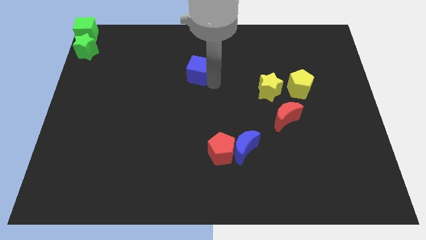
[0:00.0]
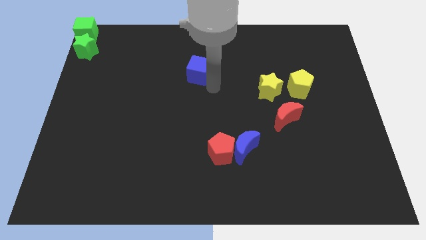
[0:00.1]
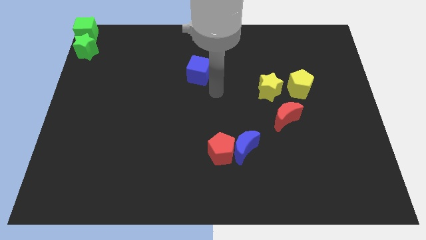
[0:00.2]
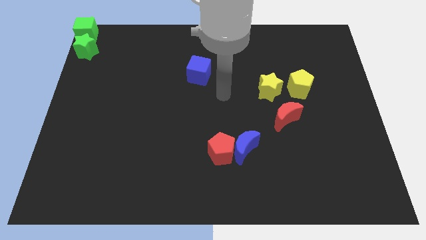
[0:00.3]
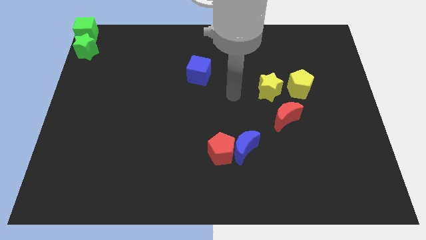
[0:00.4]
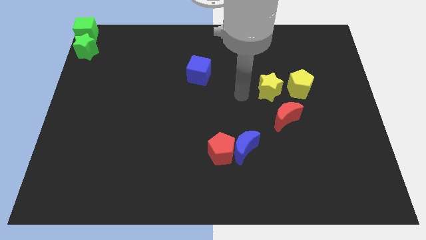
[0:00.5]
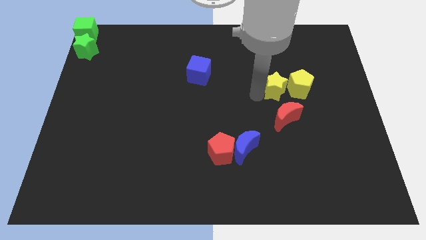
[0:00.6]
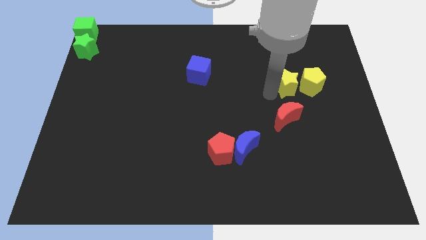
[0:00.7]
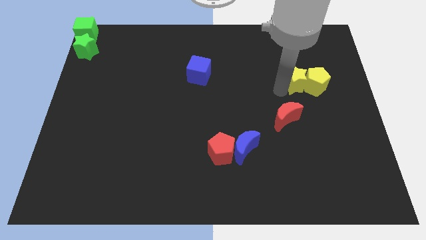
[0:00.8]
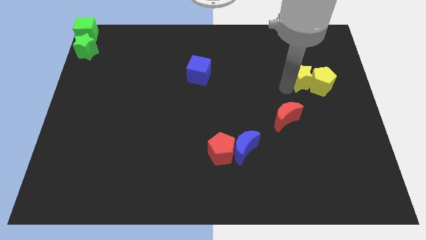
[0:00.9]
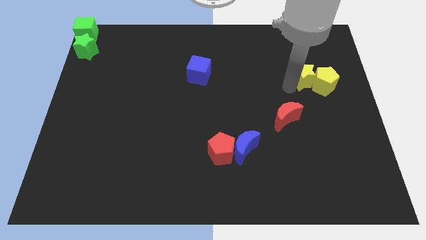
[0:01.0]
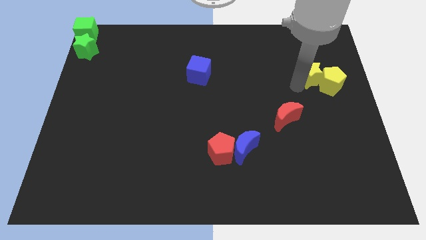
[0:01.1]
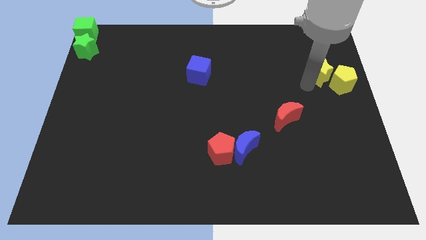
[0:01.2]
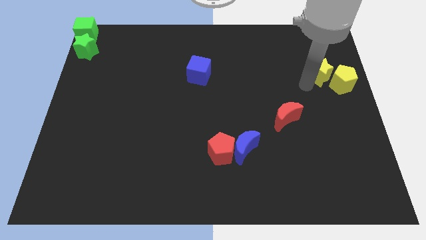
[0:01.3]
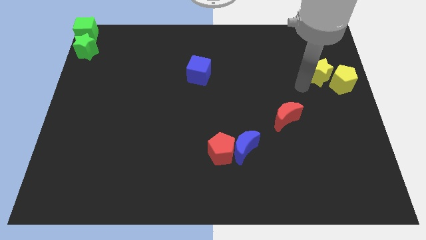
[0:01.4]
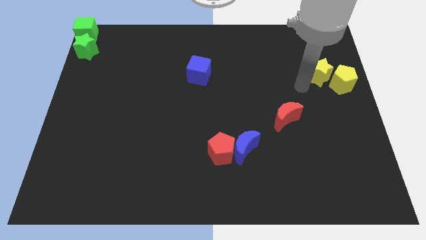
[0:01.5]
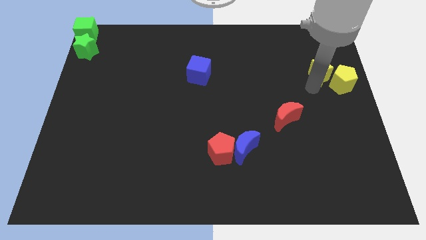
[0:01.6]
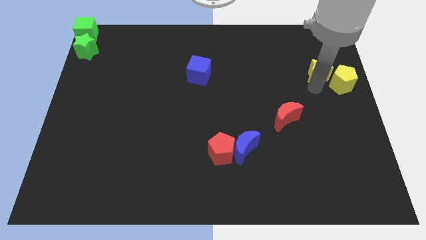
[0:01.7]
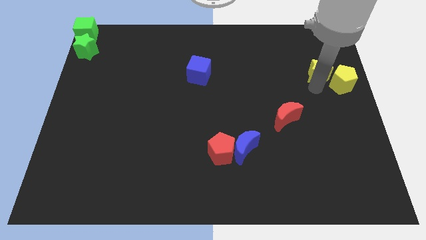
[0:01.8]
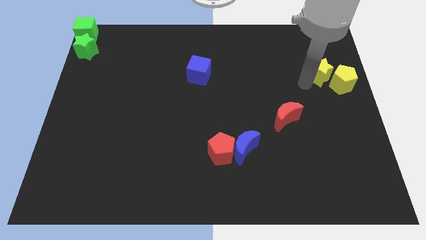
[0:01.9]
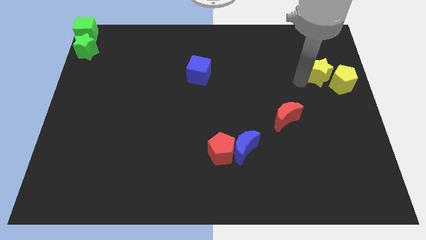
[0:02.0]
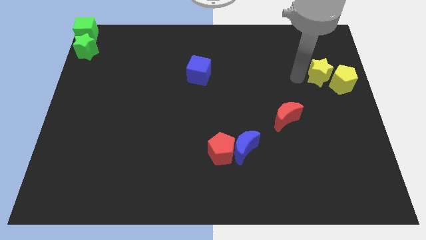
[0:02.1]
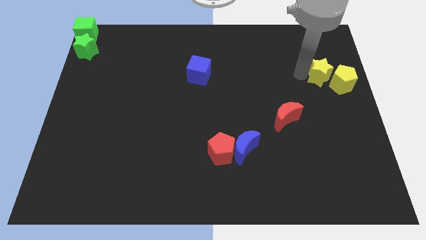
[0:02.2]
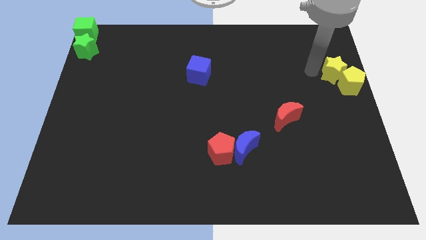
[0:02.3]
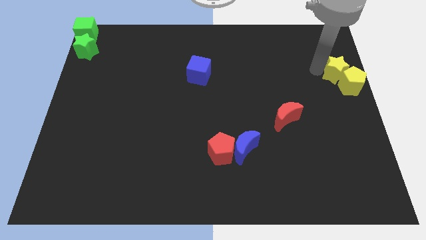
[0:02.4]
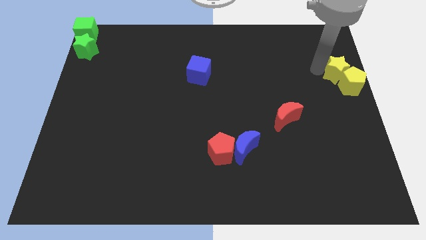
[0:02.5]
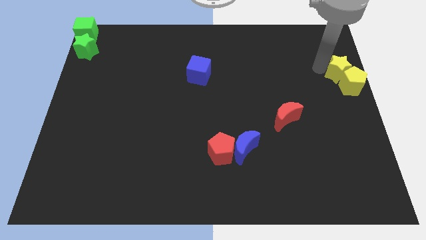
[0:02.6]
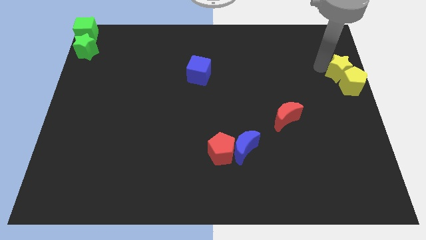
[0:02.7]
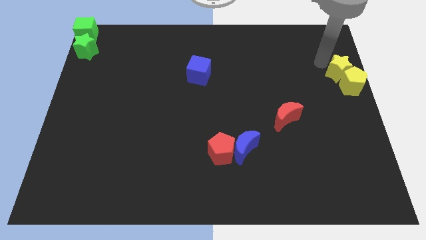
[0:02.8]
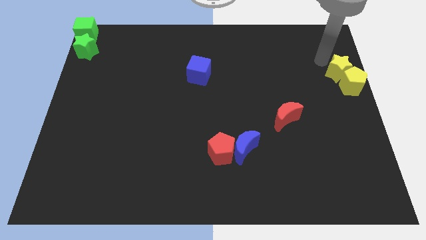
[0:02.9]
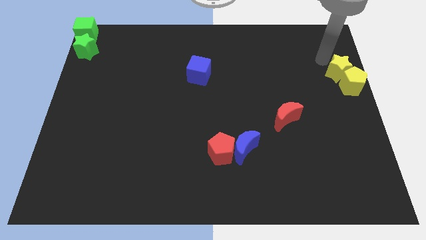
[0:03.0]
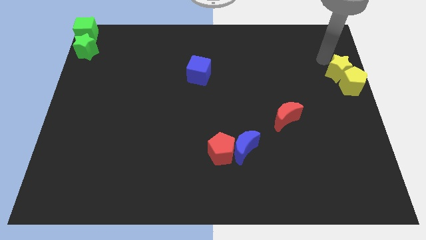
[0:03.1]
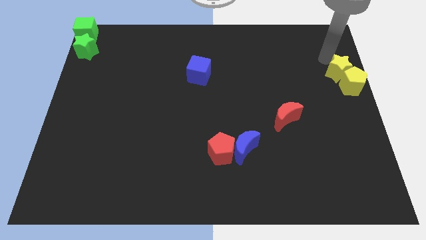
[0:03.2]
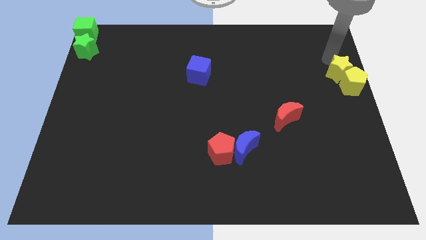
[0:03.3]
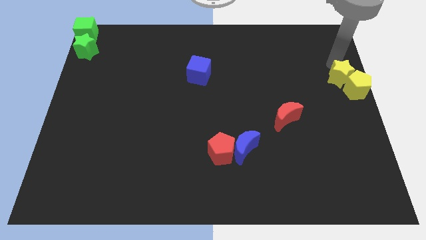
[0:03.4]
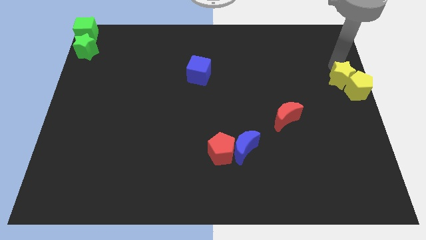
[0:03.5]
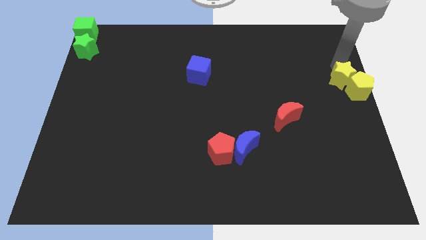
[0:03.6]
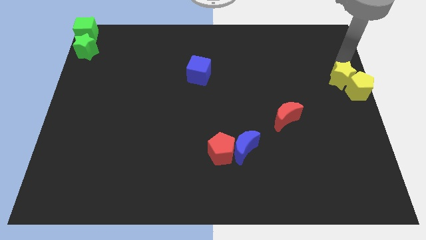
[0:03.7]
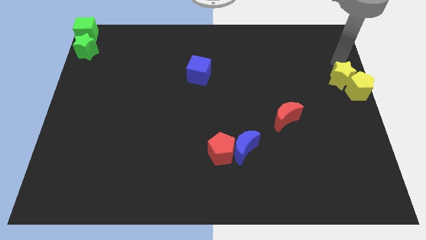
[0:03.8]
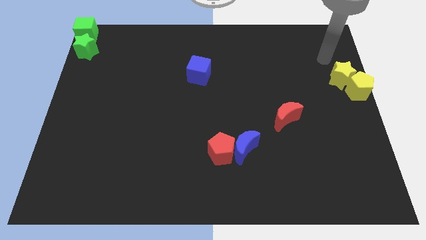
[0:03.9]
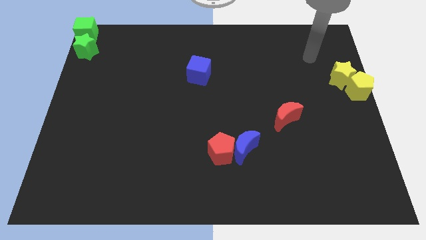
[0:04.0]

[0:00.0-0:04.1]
place the group of yellow blocks at the center right of the board

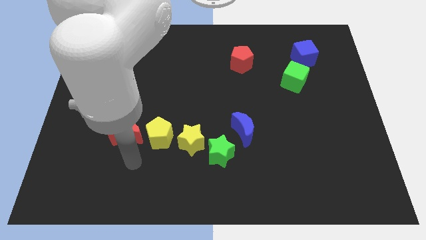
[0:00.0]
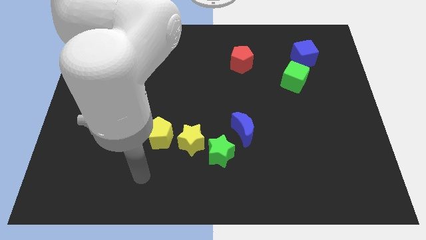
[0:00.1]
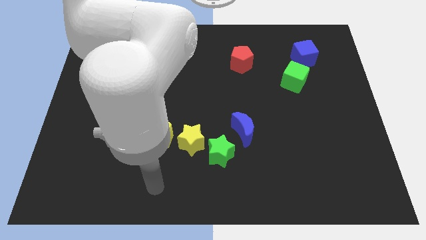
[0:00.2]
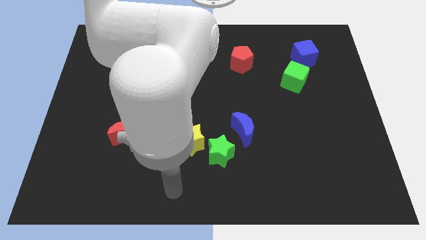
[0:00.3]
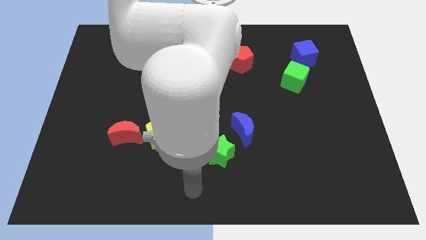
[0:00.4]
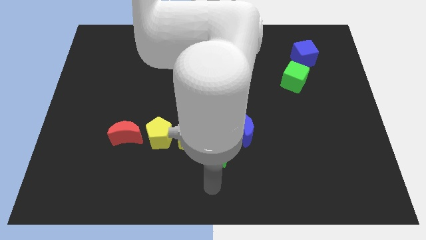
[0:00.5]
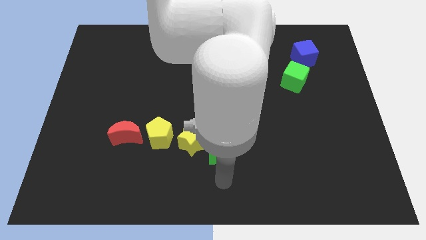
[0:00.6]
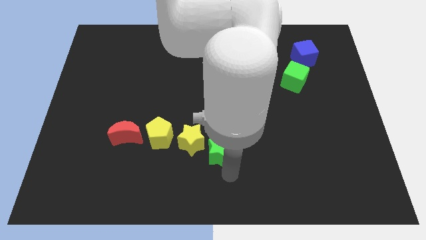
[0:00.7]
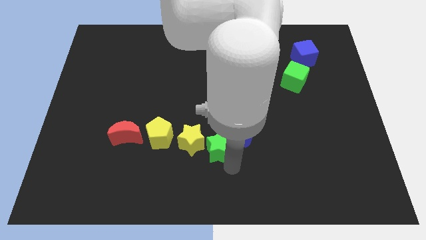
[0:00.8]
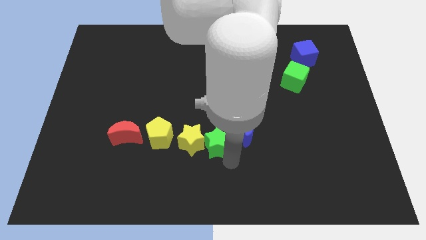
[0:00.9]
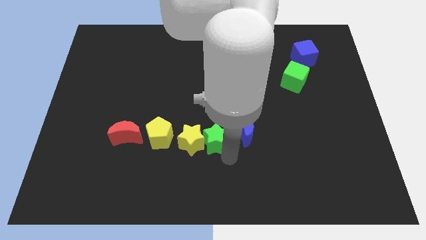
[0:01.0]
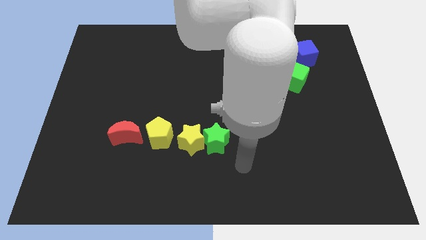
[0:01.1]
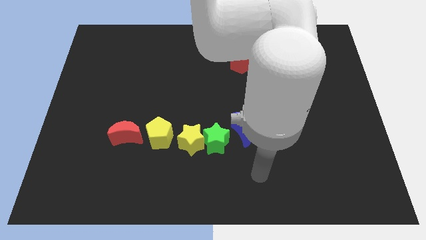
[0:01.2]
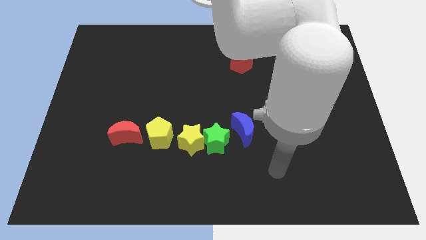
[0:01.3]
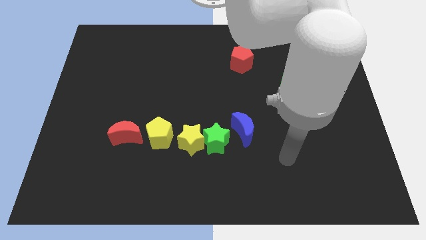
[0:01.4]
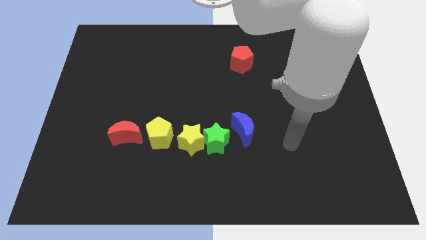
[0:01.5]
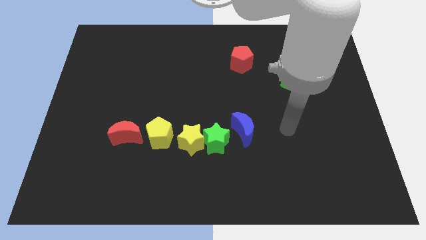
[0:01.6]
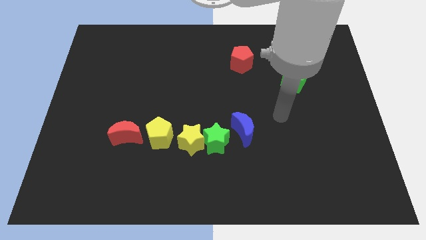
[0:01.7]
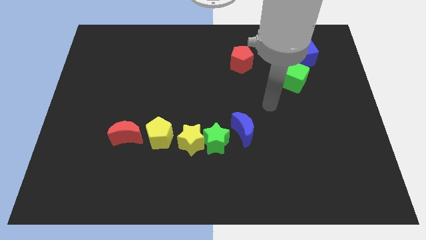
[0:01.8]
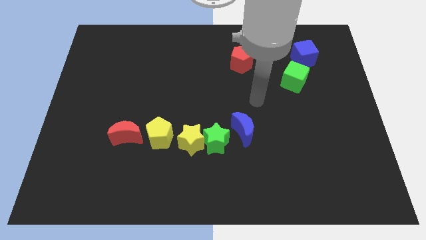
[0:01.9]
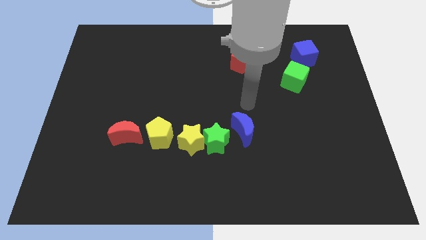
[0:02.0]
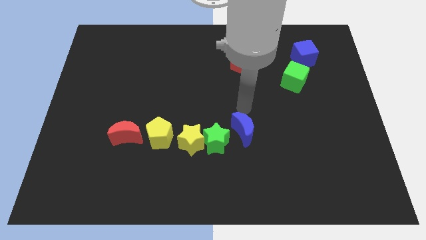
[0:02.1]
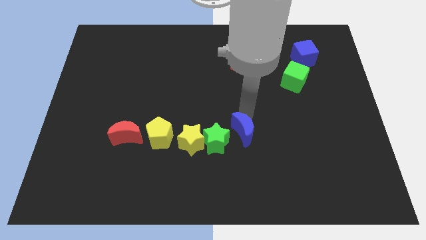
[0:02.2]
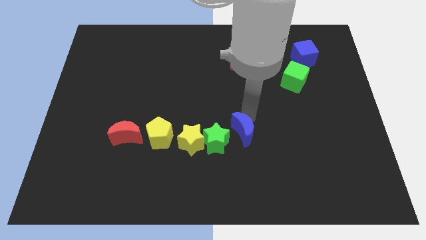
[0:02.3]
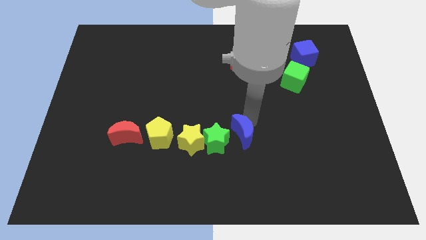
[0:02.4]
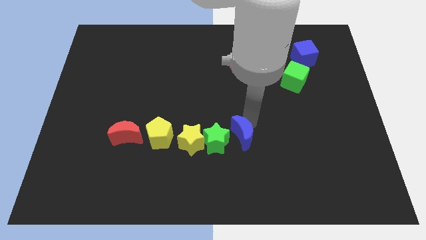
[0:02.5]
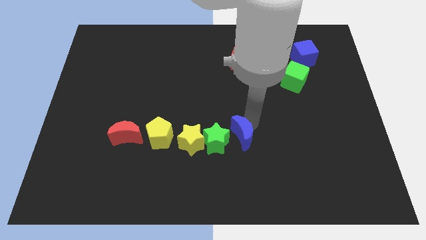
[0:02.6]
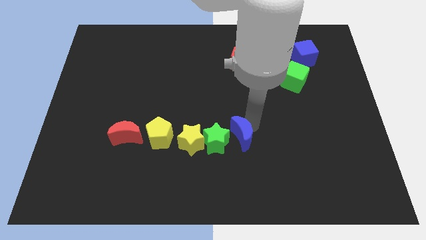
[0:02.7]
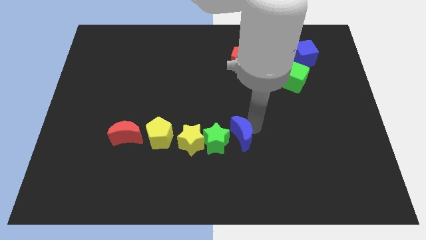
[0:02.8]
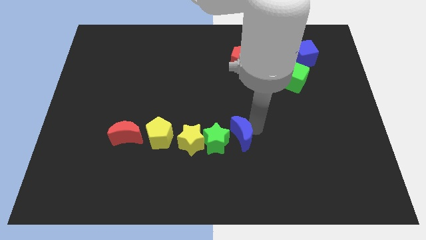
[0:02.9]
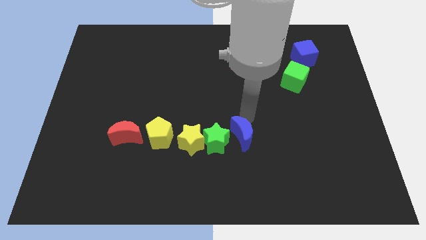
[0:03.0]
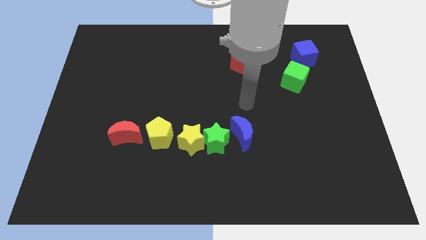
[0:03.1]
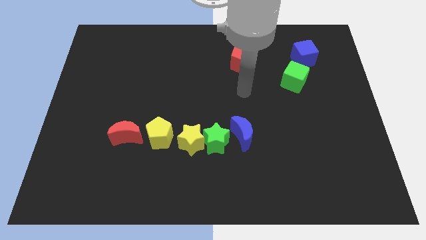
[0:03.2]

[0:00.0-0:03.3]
push the green star and blue crescent to the right side of the yellow star

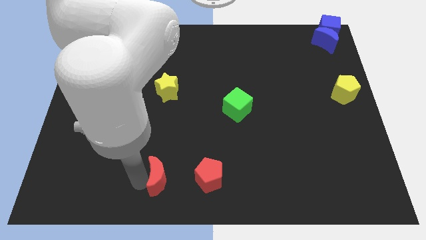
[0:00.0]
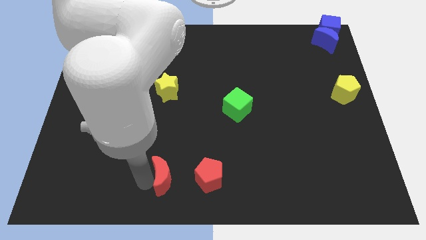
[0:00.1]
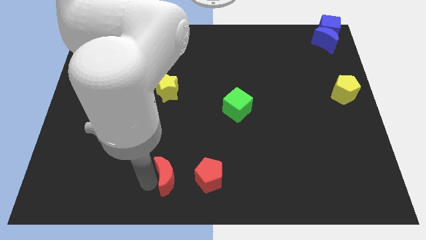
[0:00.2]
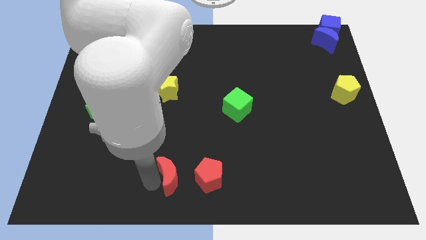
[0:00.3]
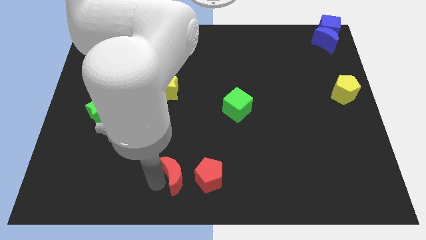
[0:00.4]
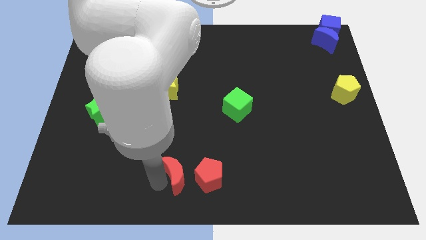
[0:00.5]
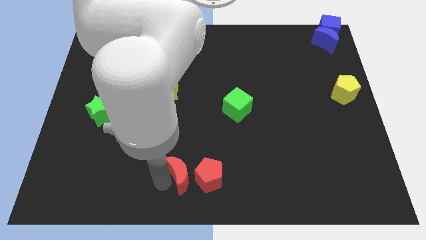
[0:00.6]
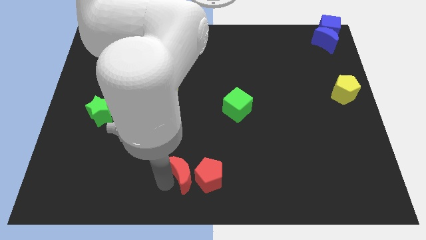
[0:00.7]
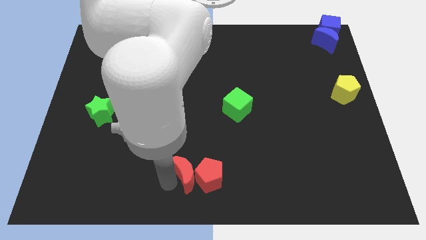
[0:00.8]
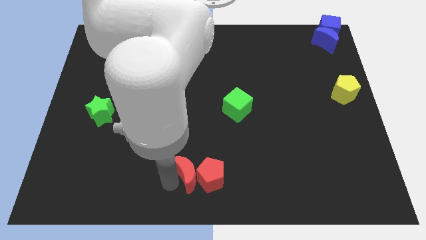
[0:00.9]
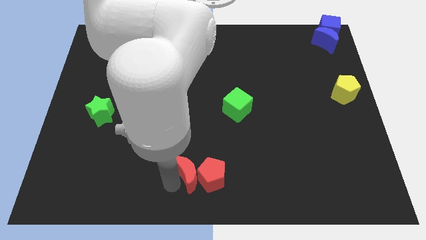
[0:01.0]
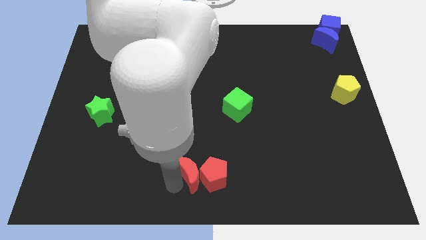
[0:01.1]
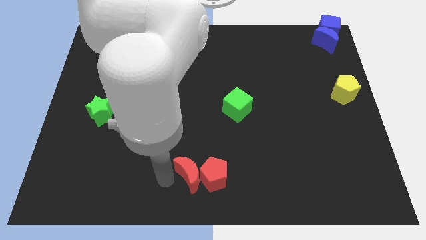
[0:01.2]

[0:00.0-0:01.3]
push red moon into the red petagon

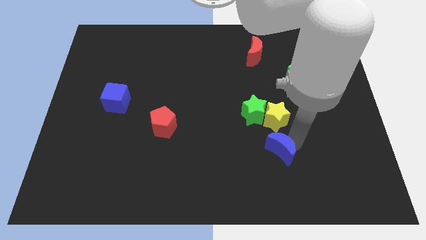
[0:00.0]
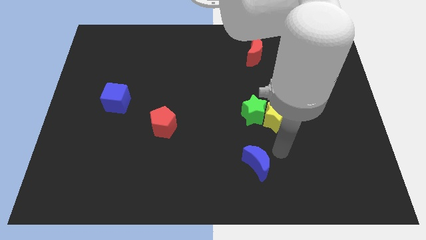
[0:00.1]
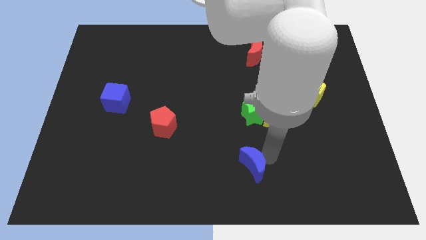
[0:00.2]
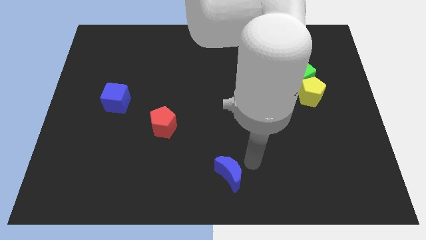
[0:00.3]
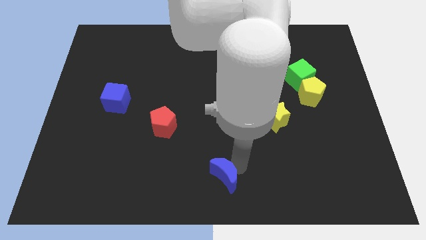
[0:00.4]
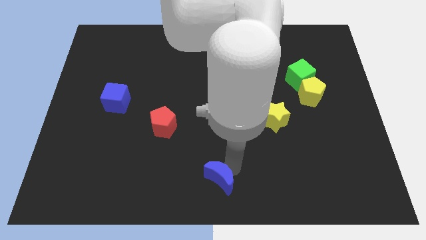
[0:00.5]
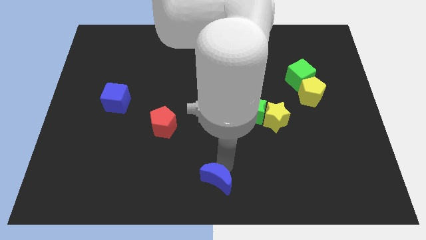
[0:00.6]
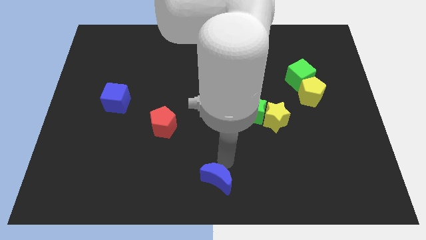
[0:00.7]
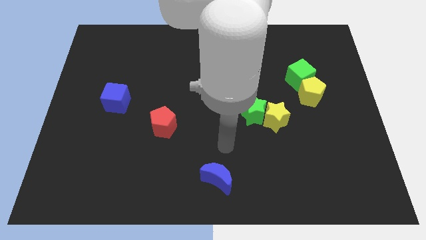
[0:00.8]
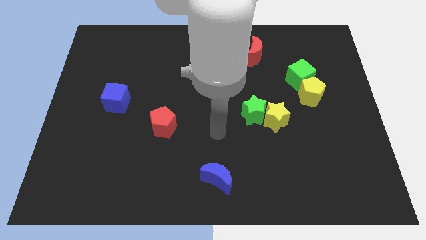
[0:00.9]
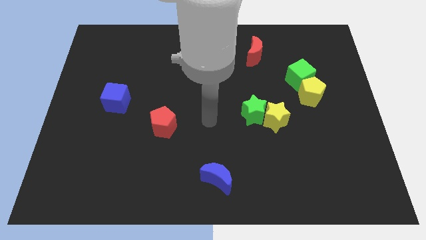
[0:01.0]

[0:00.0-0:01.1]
move the blue crescent to the bottom center of the board
